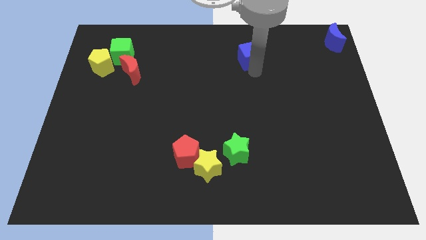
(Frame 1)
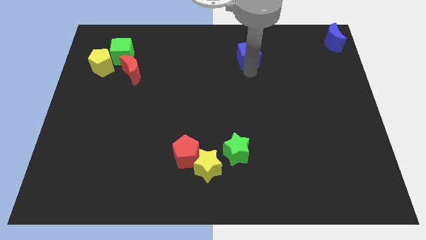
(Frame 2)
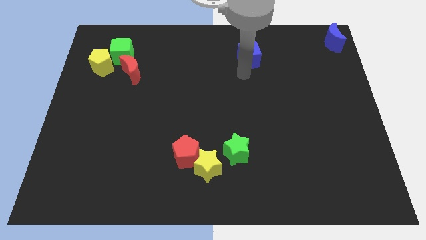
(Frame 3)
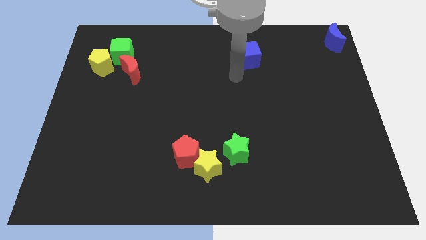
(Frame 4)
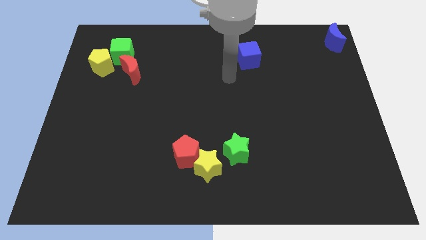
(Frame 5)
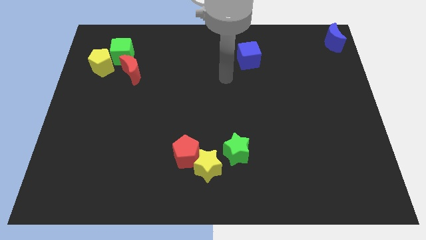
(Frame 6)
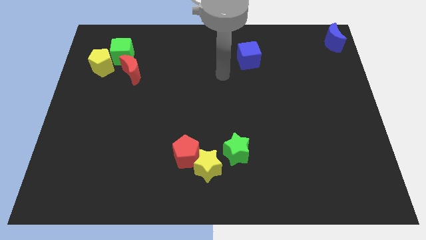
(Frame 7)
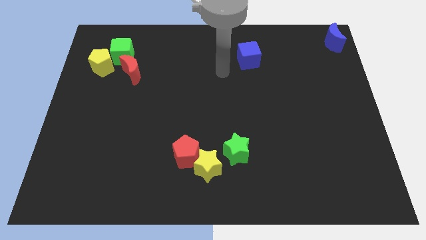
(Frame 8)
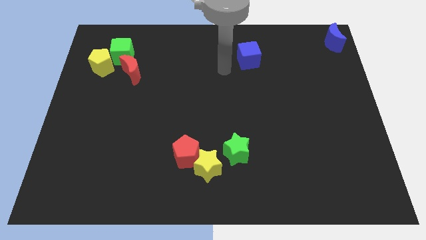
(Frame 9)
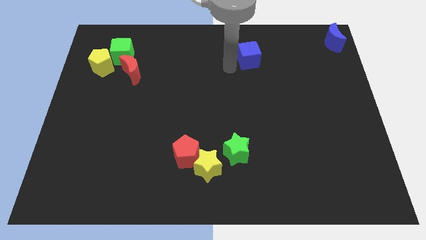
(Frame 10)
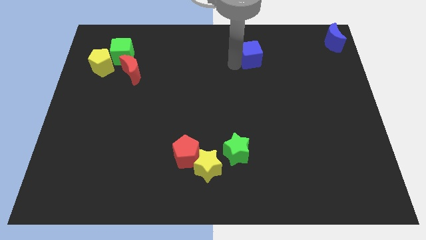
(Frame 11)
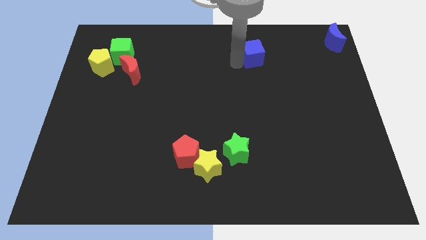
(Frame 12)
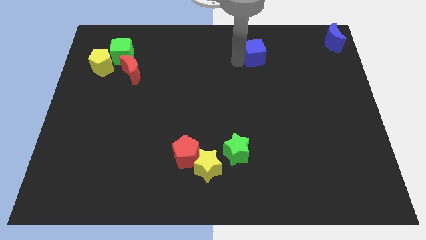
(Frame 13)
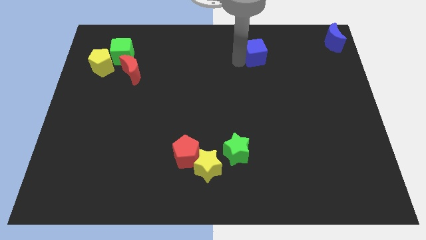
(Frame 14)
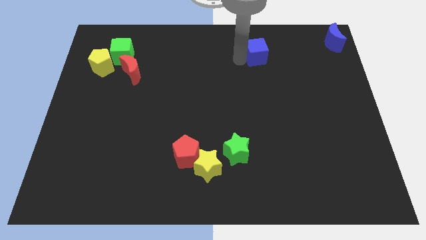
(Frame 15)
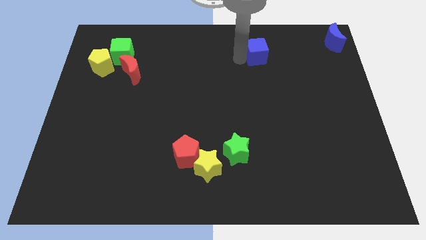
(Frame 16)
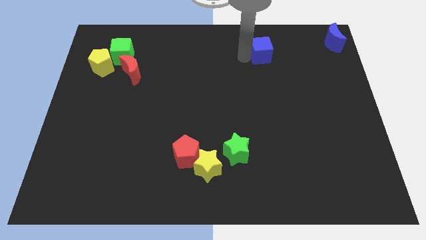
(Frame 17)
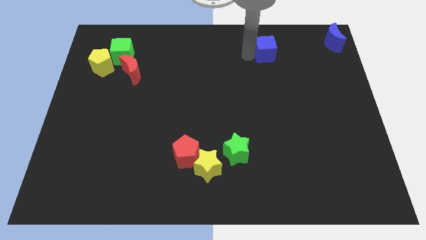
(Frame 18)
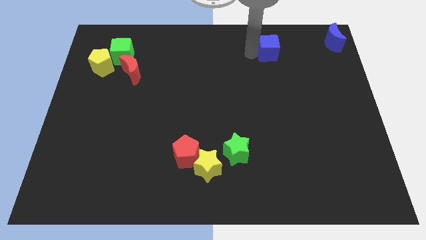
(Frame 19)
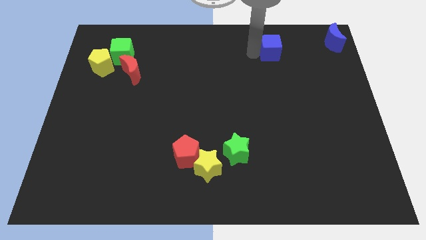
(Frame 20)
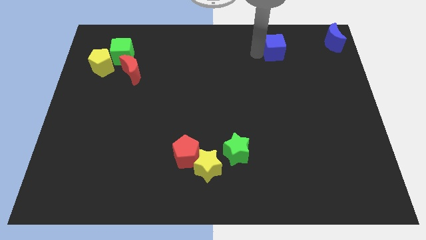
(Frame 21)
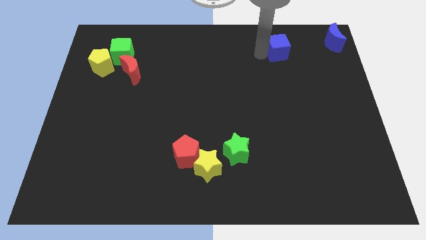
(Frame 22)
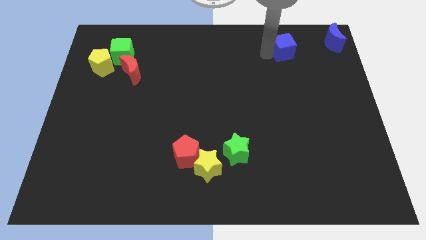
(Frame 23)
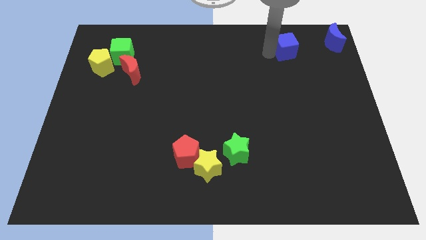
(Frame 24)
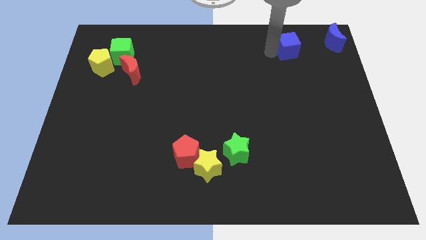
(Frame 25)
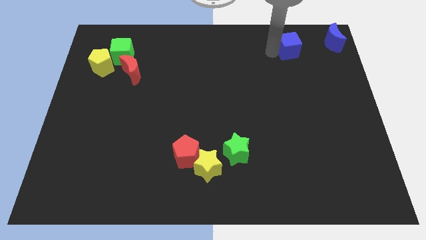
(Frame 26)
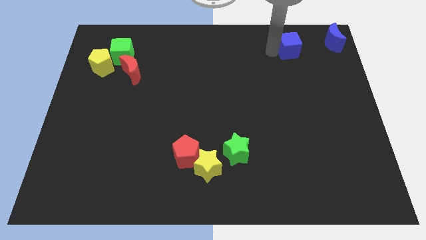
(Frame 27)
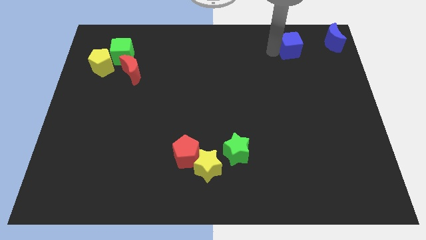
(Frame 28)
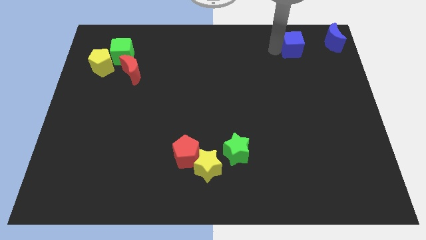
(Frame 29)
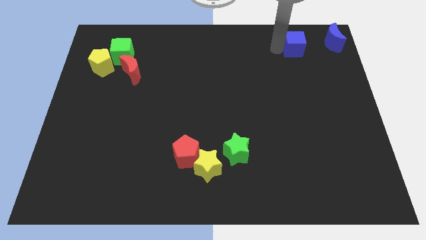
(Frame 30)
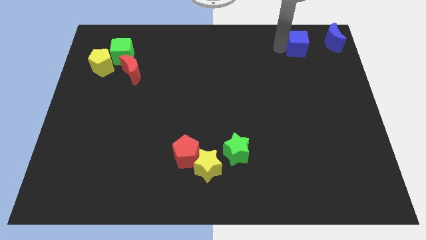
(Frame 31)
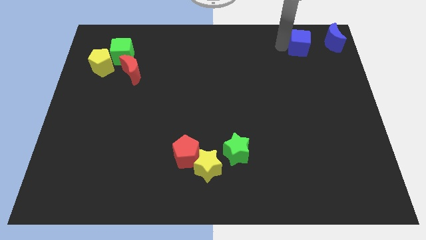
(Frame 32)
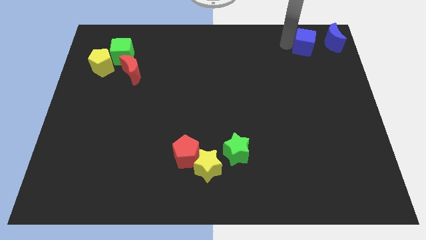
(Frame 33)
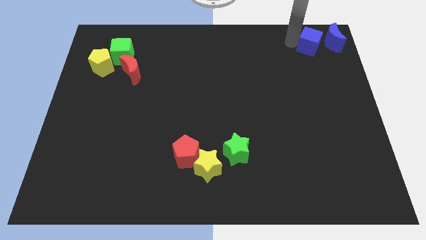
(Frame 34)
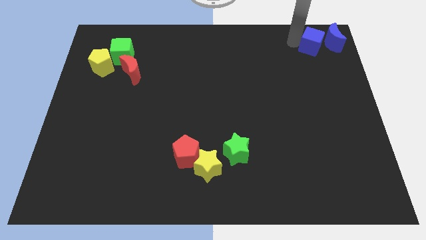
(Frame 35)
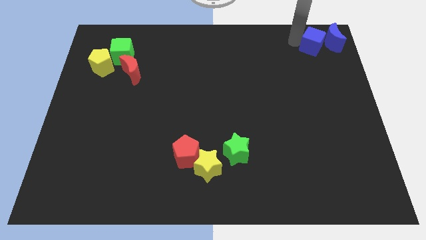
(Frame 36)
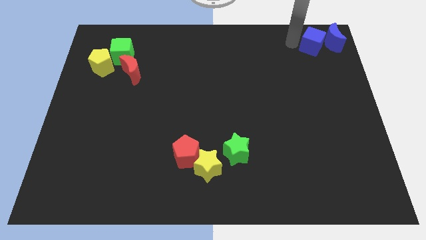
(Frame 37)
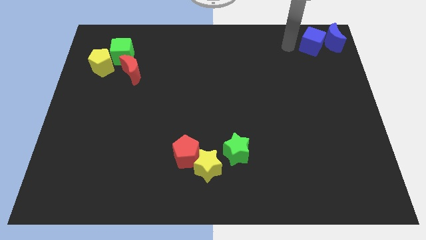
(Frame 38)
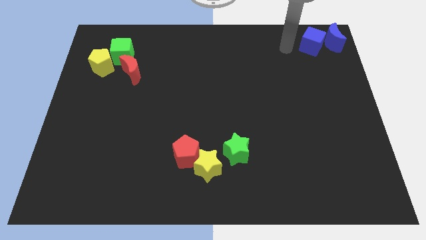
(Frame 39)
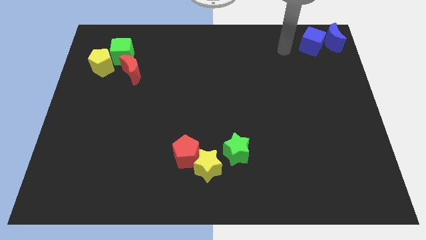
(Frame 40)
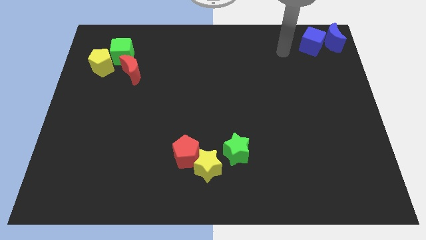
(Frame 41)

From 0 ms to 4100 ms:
push blue cube into blue moon

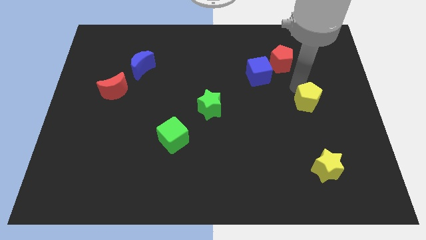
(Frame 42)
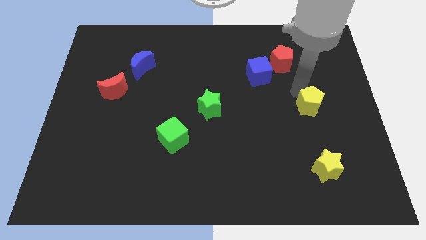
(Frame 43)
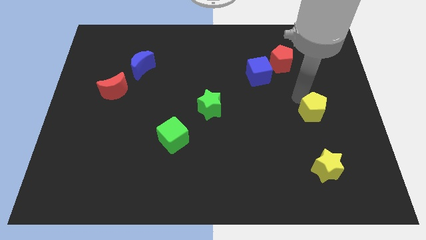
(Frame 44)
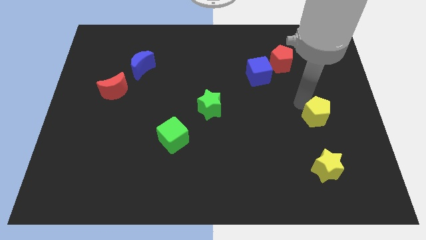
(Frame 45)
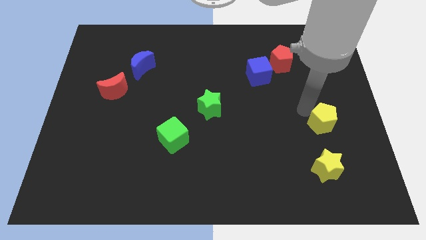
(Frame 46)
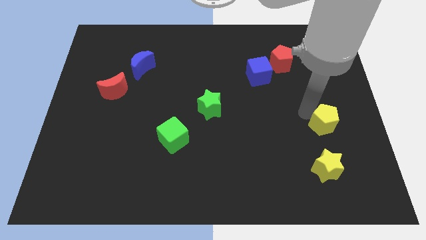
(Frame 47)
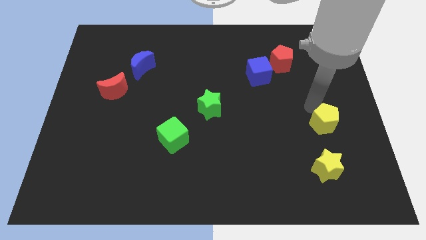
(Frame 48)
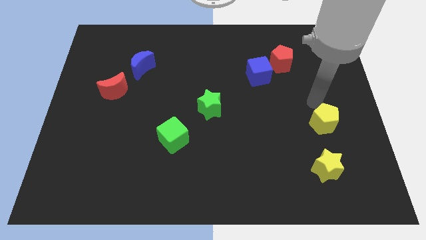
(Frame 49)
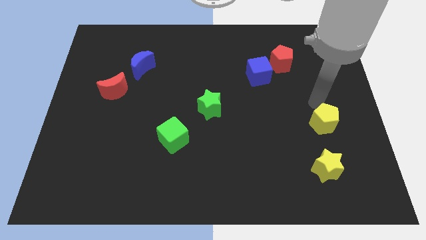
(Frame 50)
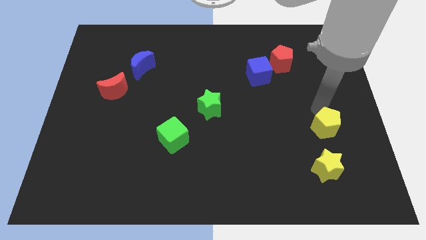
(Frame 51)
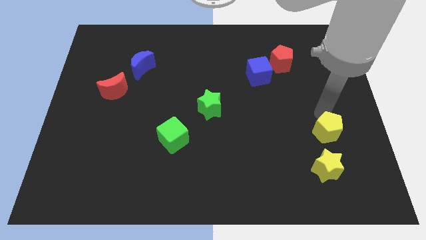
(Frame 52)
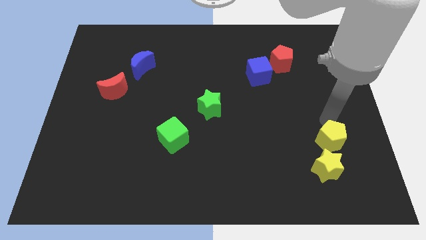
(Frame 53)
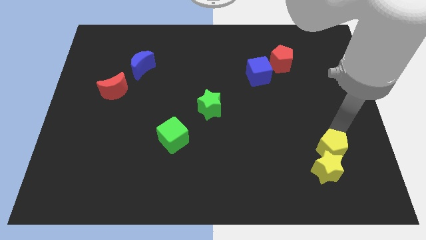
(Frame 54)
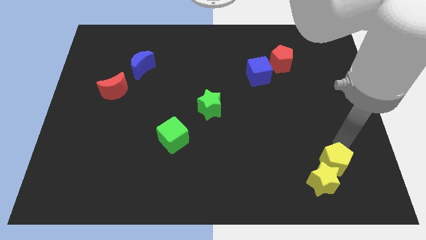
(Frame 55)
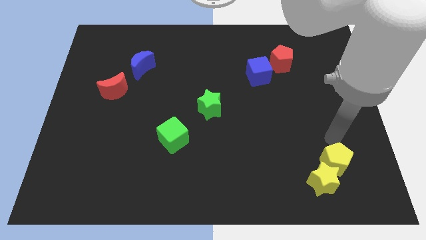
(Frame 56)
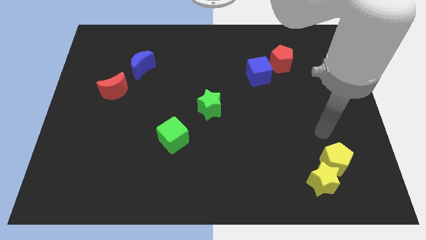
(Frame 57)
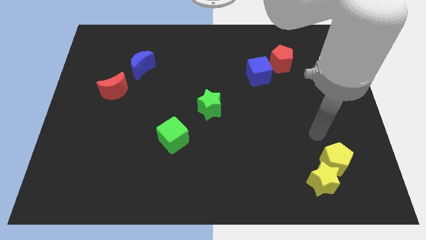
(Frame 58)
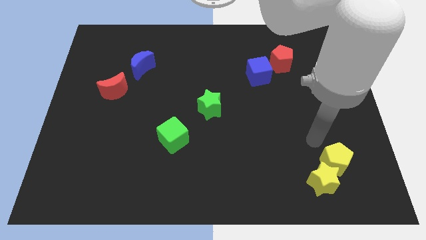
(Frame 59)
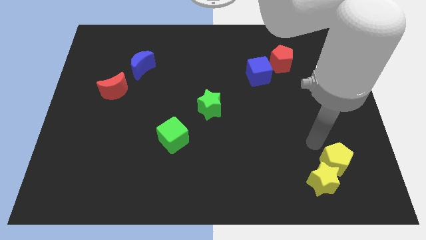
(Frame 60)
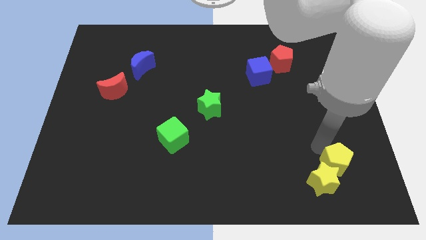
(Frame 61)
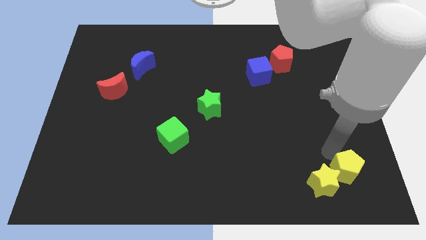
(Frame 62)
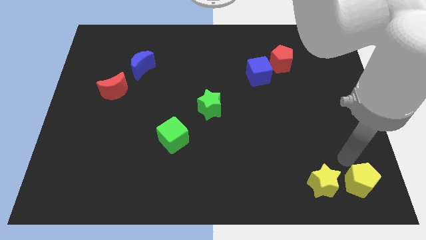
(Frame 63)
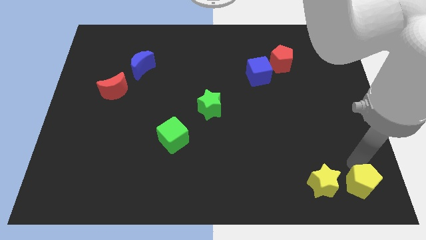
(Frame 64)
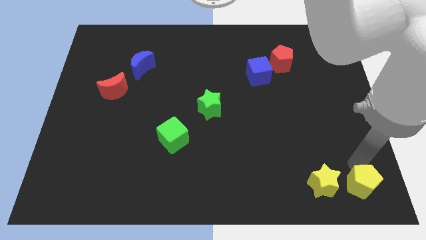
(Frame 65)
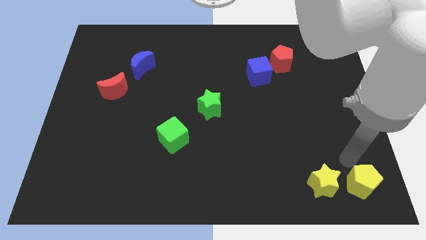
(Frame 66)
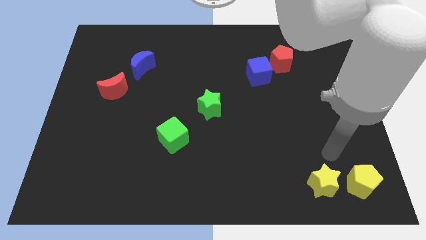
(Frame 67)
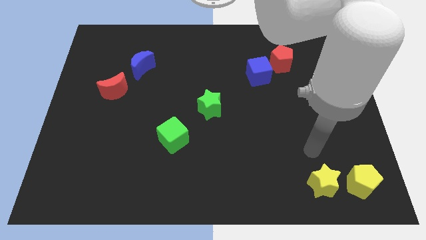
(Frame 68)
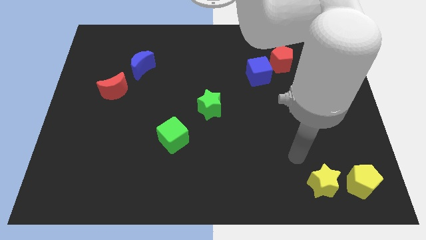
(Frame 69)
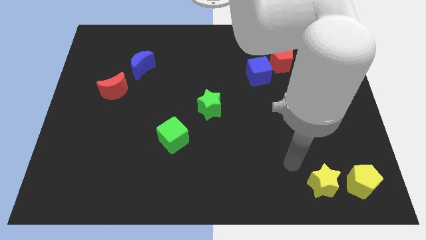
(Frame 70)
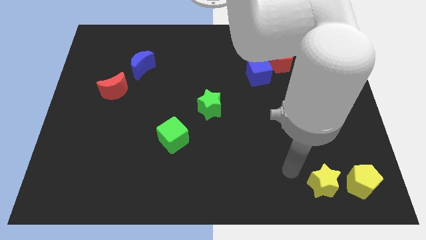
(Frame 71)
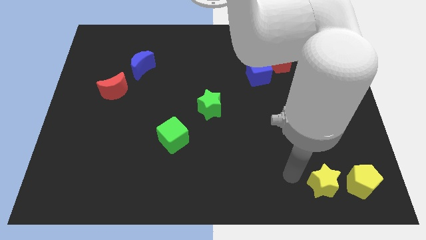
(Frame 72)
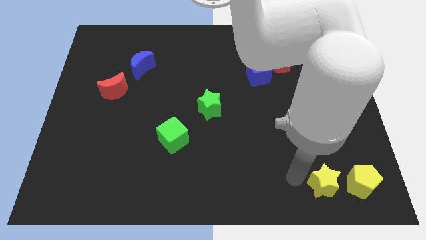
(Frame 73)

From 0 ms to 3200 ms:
push the yellow pentagon to the right of the yellow star

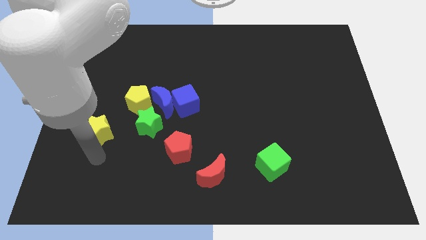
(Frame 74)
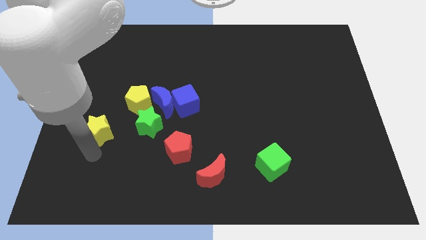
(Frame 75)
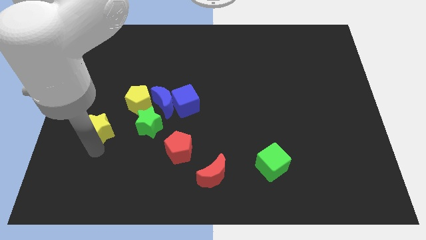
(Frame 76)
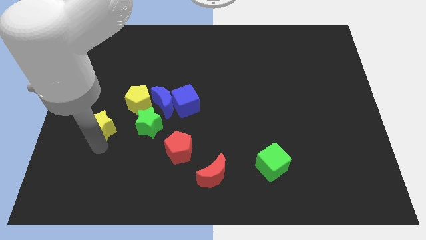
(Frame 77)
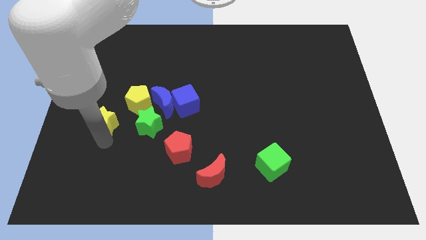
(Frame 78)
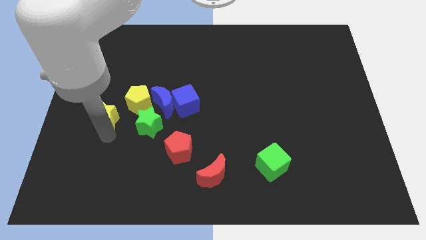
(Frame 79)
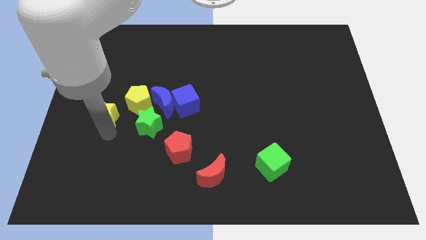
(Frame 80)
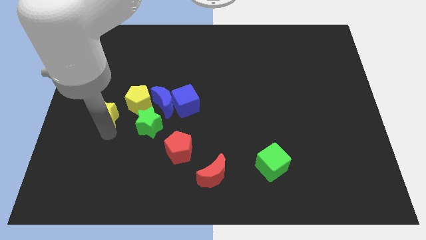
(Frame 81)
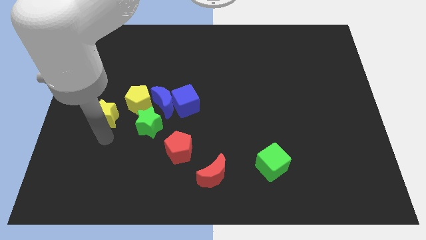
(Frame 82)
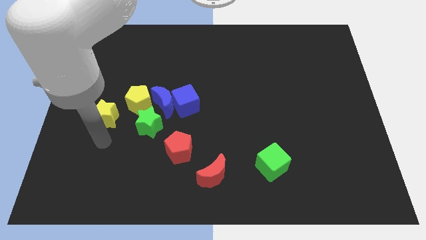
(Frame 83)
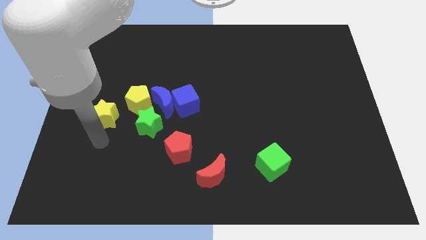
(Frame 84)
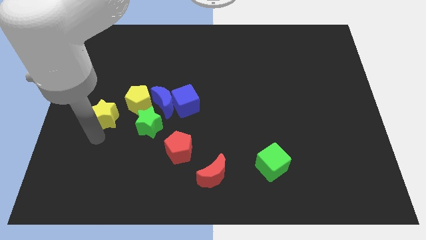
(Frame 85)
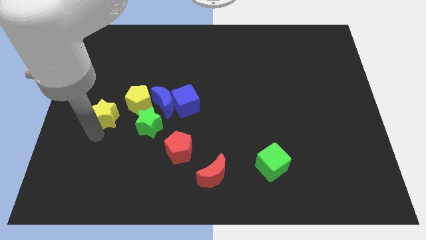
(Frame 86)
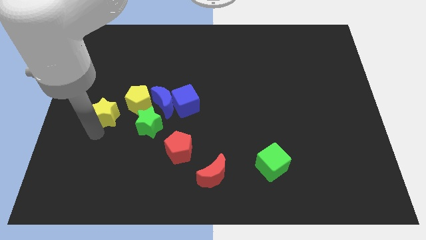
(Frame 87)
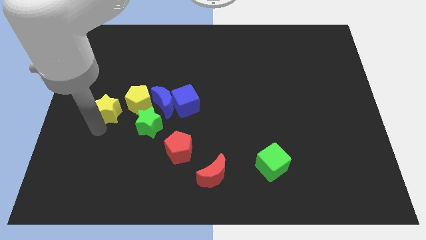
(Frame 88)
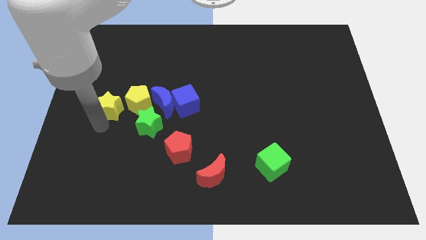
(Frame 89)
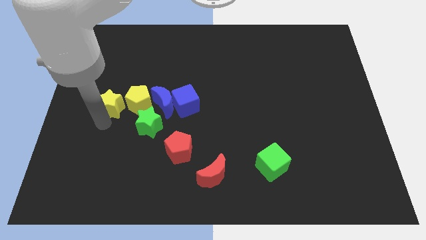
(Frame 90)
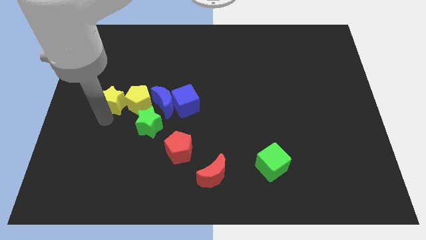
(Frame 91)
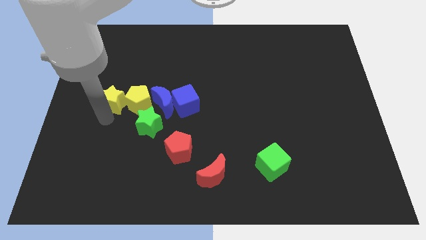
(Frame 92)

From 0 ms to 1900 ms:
put the yellow star on the left side of the yellow pentagon
